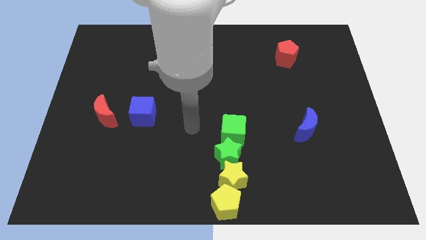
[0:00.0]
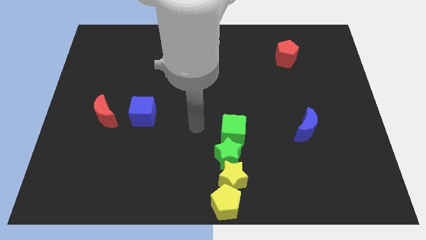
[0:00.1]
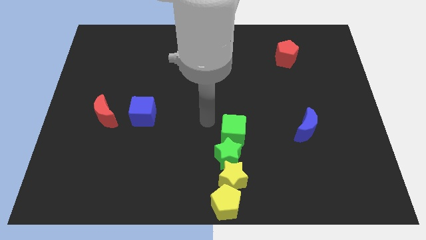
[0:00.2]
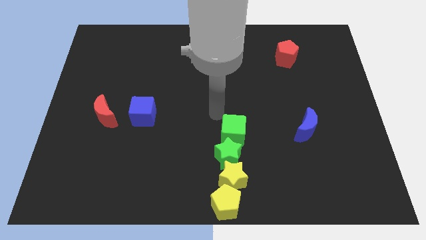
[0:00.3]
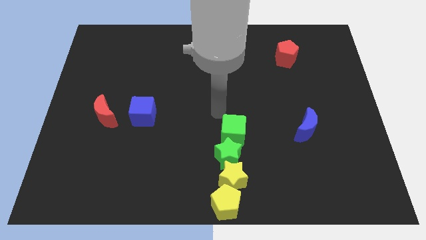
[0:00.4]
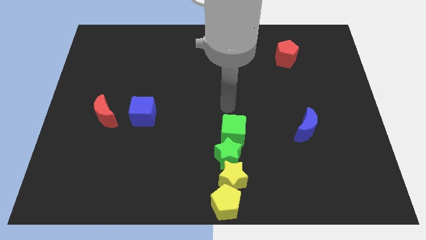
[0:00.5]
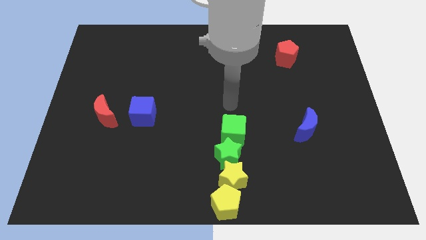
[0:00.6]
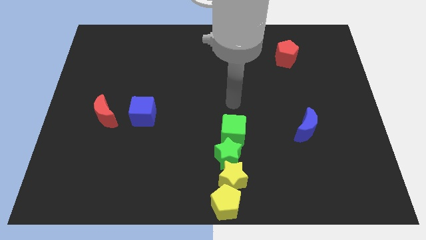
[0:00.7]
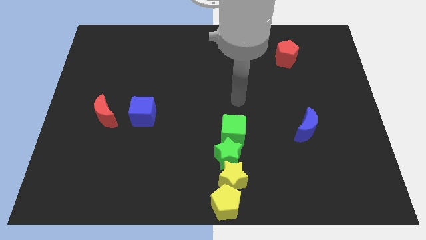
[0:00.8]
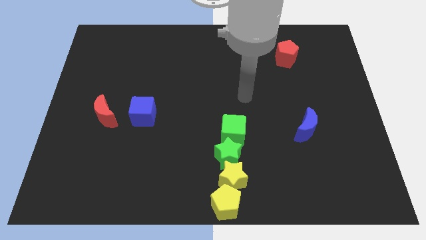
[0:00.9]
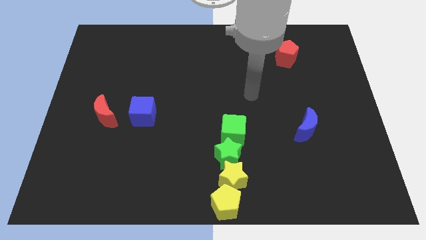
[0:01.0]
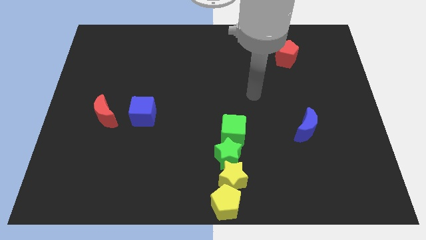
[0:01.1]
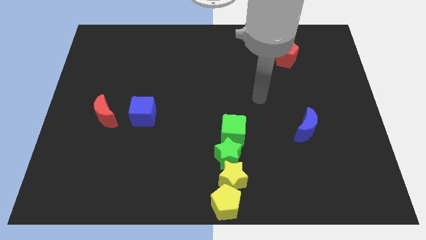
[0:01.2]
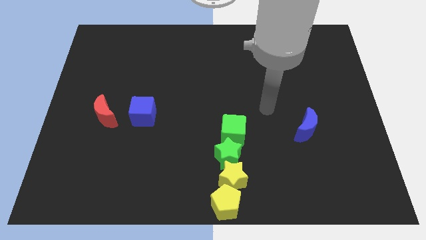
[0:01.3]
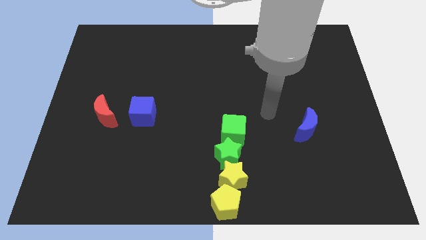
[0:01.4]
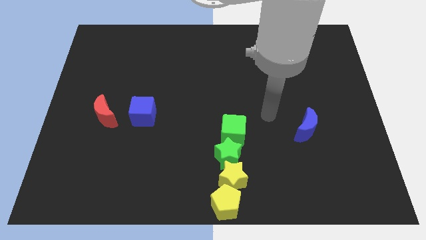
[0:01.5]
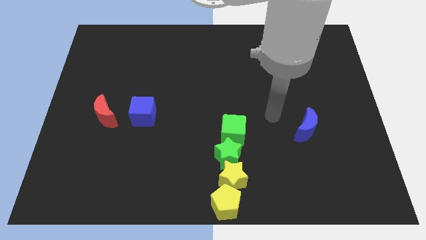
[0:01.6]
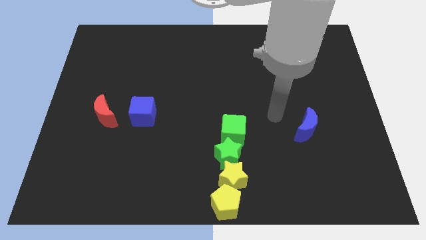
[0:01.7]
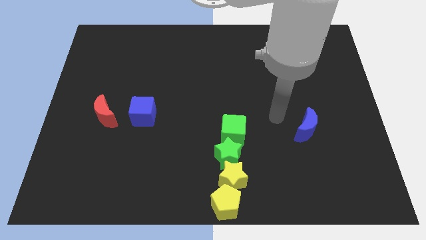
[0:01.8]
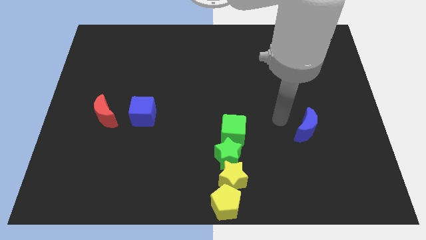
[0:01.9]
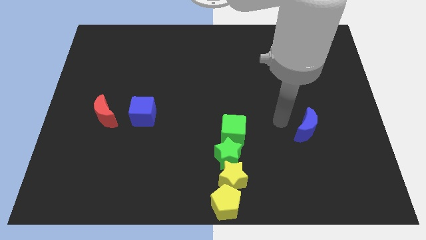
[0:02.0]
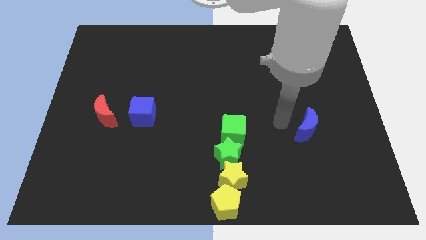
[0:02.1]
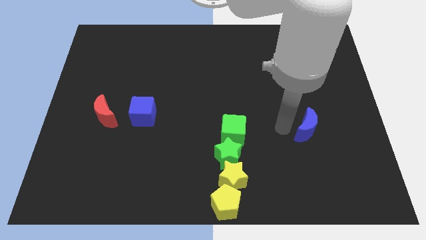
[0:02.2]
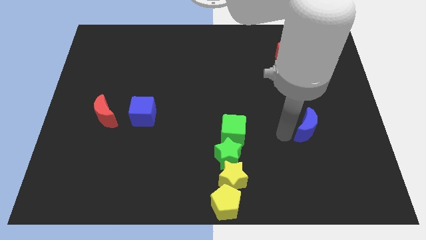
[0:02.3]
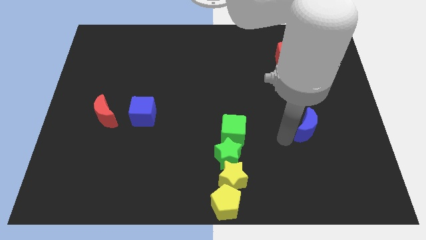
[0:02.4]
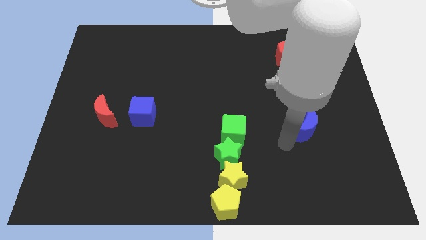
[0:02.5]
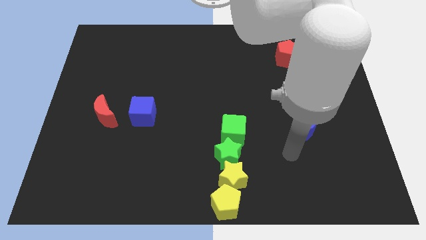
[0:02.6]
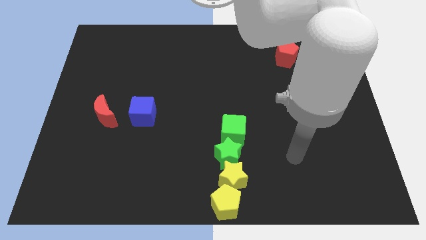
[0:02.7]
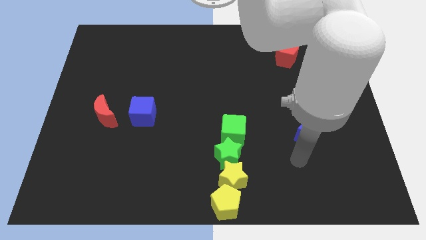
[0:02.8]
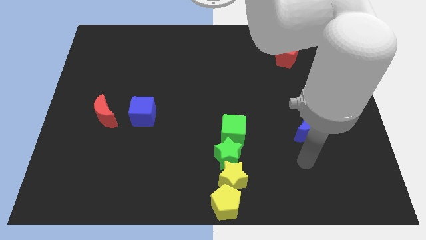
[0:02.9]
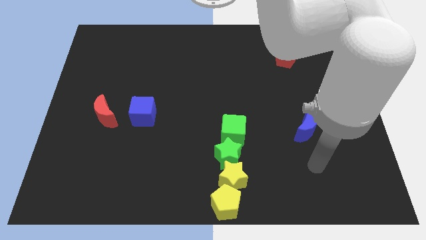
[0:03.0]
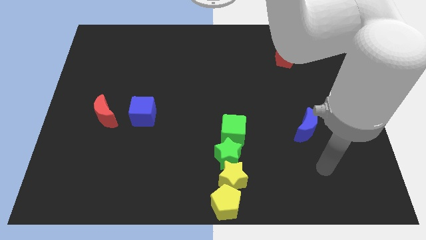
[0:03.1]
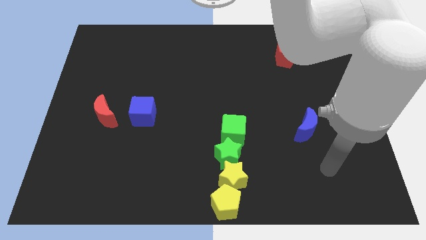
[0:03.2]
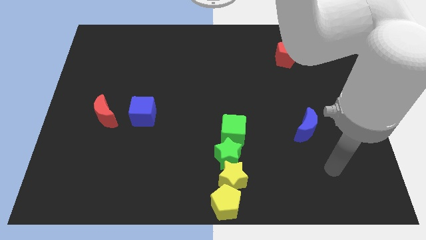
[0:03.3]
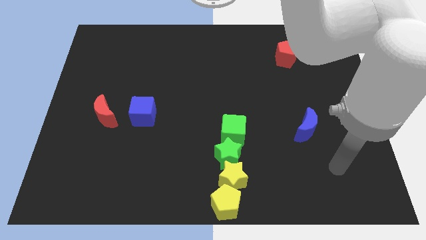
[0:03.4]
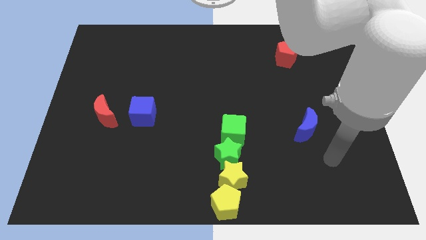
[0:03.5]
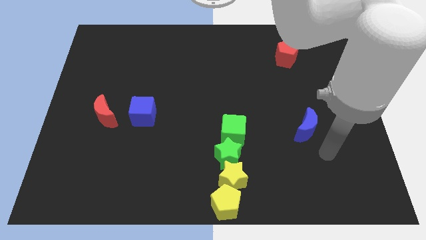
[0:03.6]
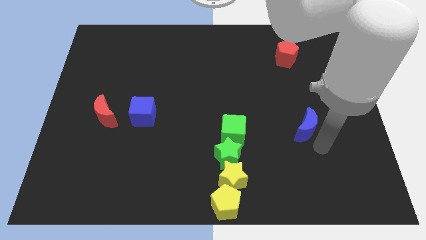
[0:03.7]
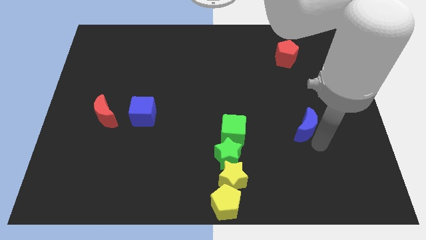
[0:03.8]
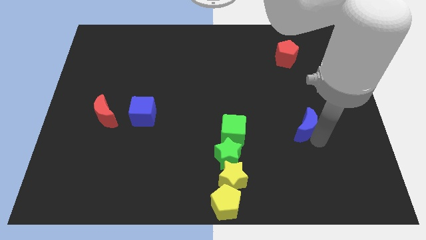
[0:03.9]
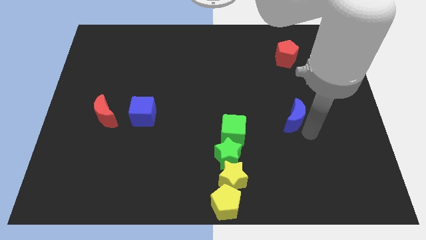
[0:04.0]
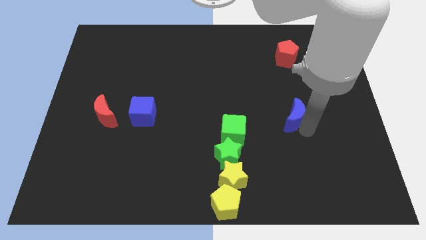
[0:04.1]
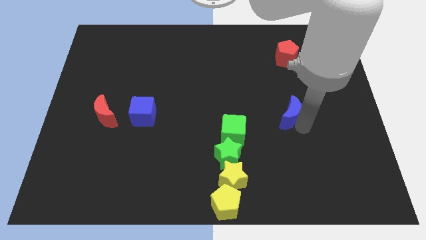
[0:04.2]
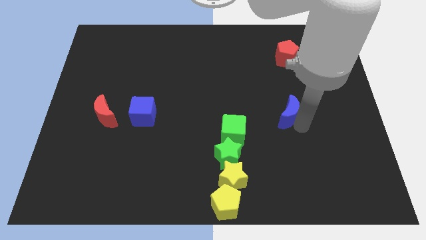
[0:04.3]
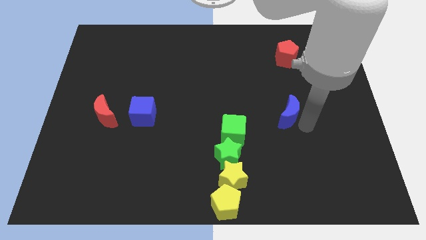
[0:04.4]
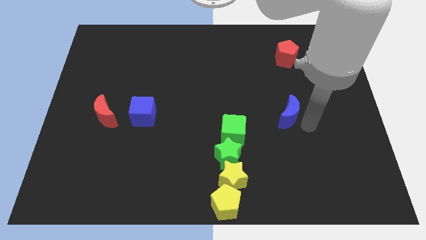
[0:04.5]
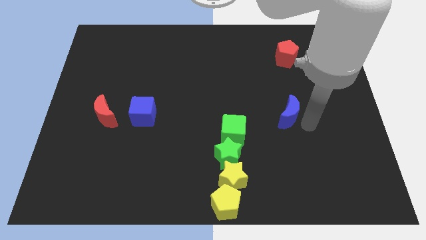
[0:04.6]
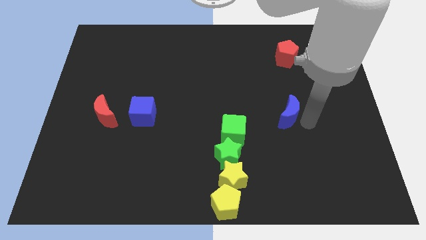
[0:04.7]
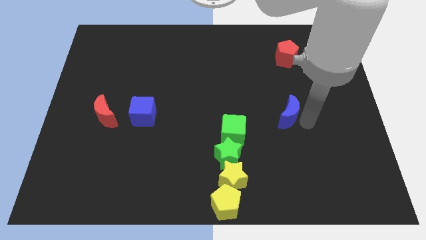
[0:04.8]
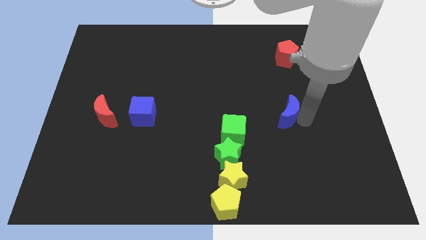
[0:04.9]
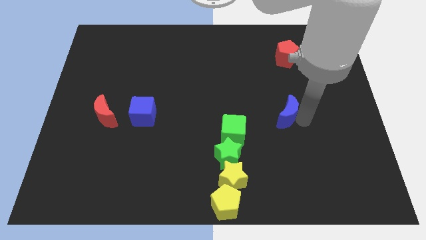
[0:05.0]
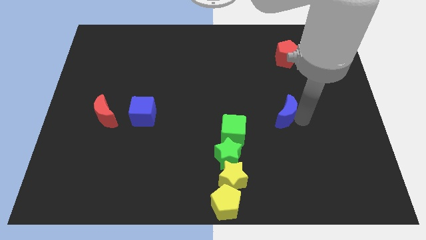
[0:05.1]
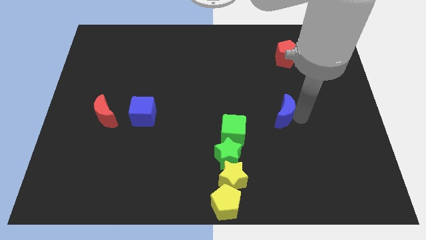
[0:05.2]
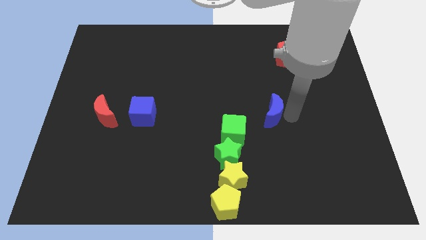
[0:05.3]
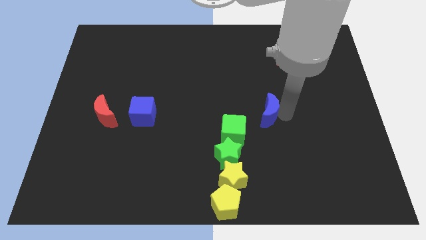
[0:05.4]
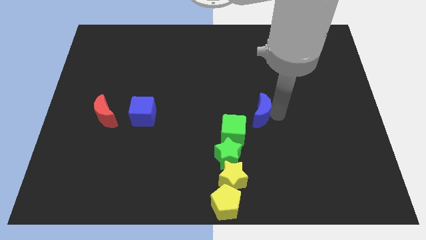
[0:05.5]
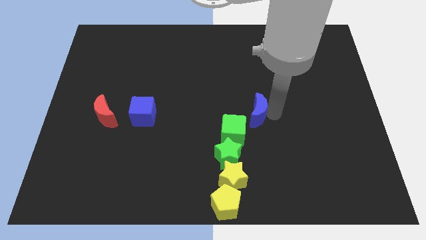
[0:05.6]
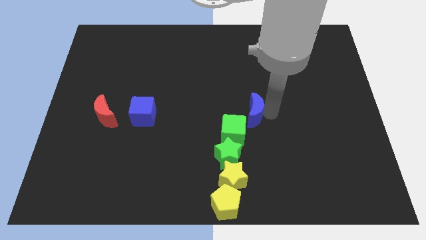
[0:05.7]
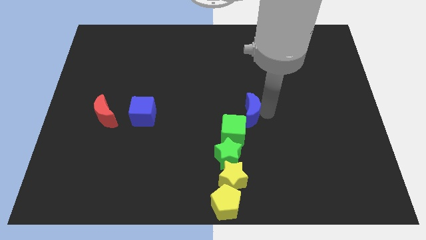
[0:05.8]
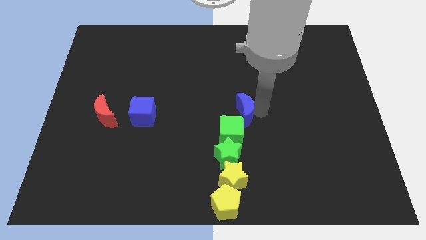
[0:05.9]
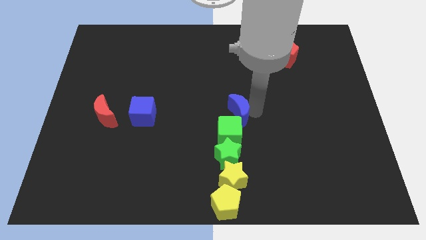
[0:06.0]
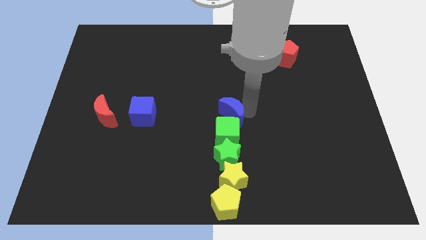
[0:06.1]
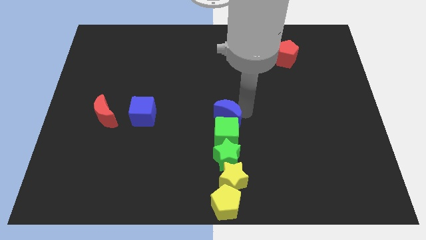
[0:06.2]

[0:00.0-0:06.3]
drag the blue moon into the top side of the green cube

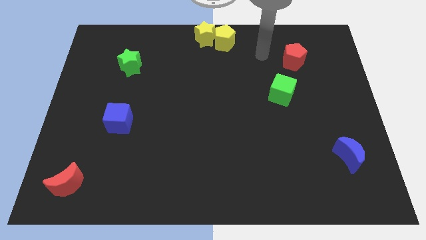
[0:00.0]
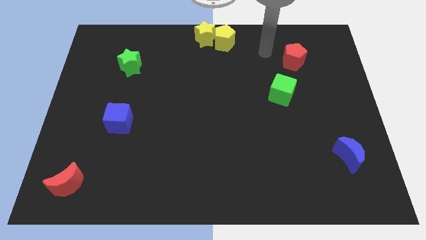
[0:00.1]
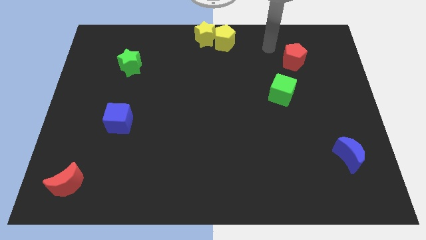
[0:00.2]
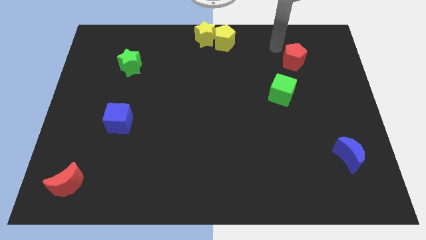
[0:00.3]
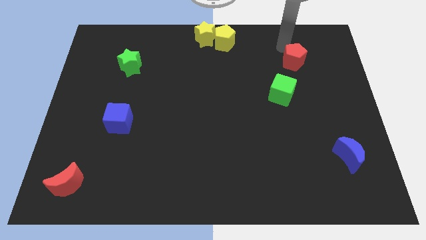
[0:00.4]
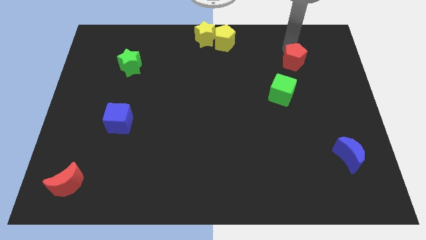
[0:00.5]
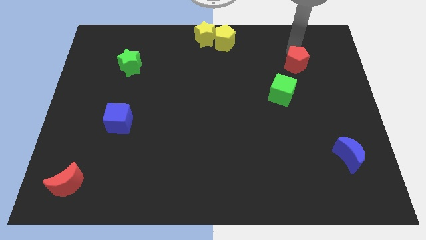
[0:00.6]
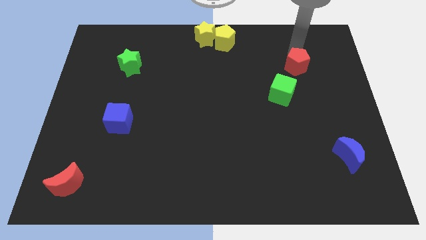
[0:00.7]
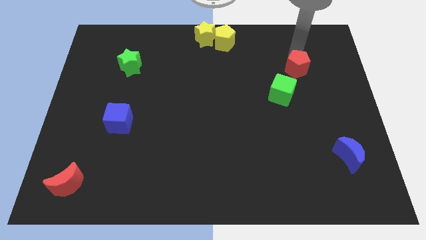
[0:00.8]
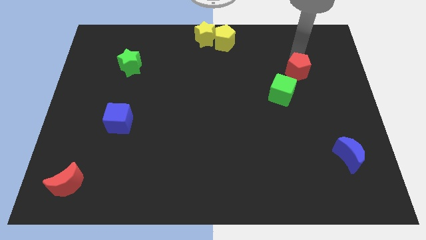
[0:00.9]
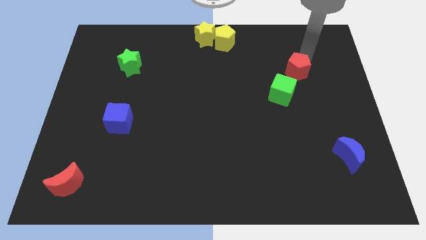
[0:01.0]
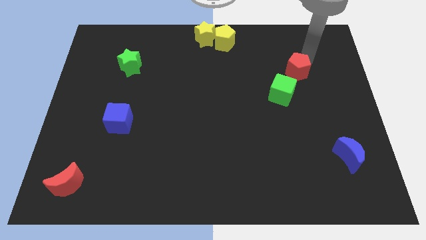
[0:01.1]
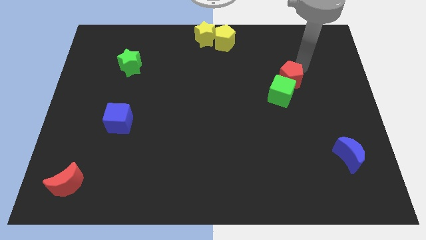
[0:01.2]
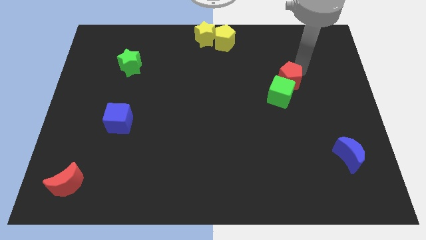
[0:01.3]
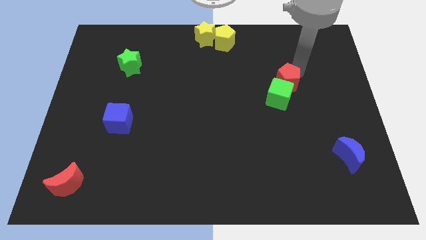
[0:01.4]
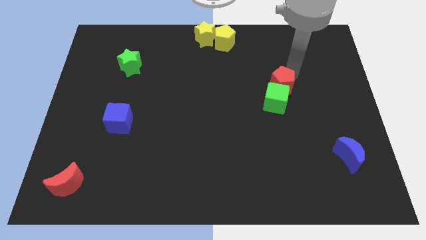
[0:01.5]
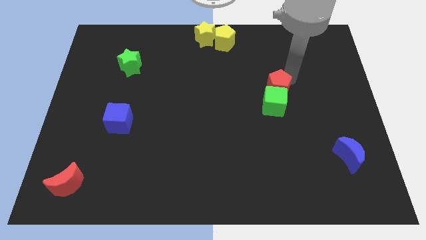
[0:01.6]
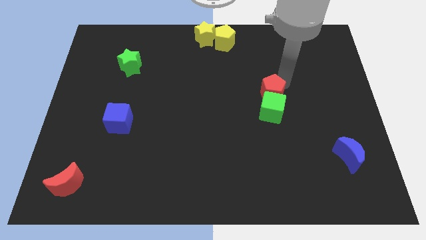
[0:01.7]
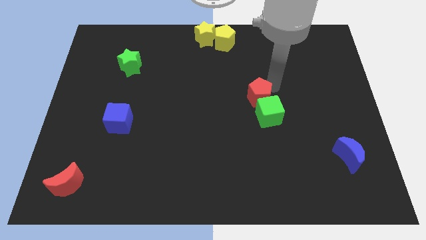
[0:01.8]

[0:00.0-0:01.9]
push red pentagon above green cube

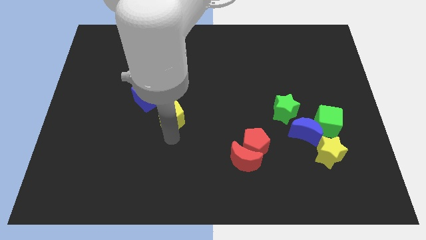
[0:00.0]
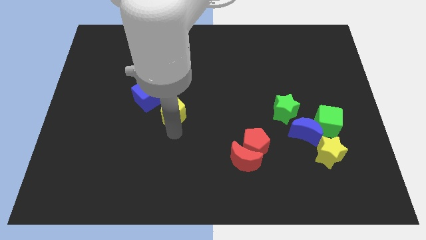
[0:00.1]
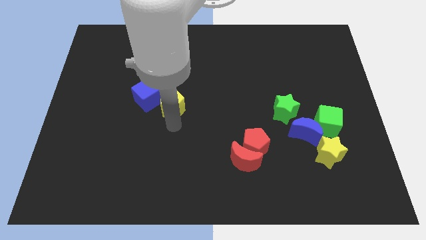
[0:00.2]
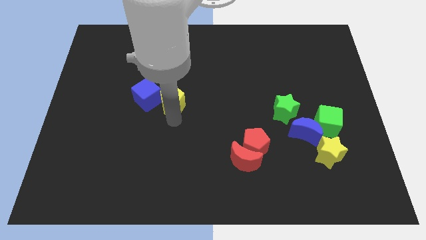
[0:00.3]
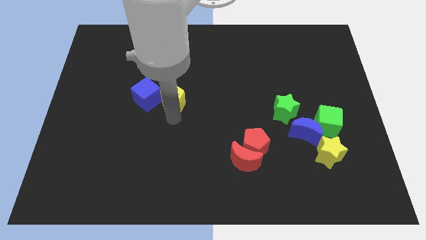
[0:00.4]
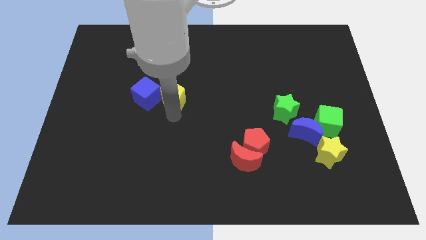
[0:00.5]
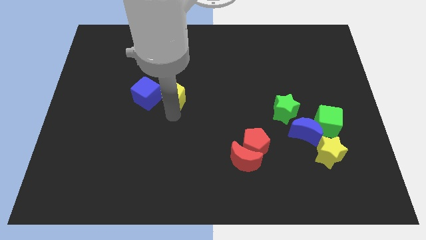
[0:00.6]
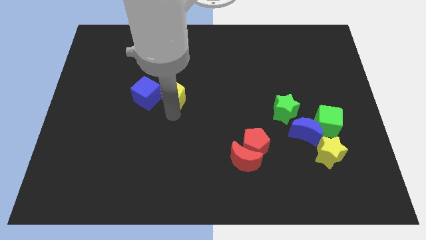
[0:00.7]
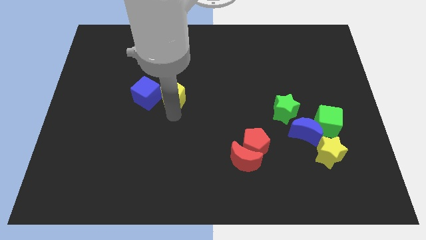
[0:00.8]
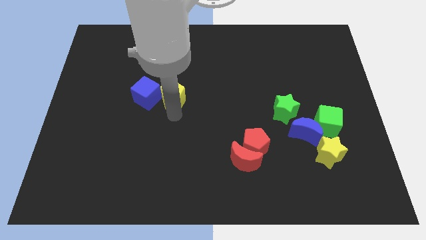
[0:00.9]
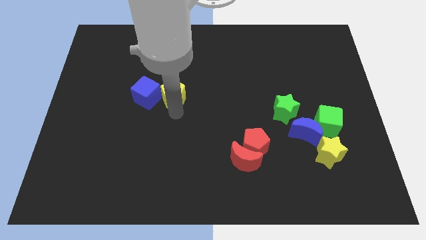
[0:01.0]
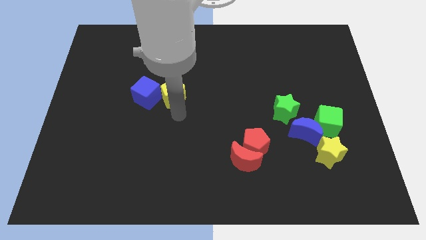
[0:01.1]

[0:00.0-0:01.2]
push the yellow pentagon towards the blue cube
